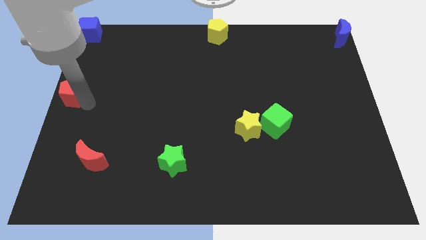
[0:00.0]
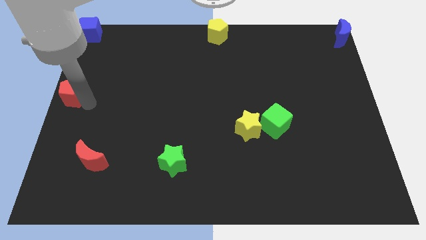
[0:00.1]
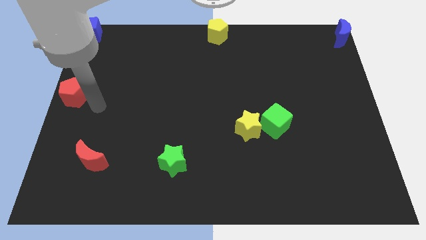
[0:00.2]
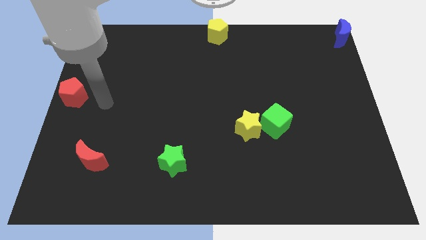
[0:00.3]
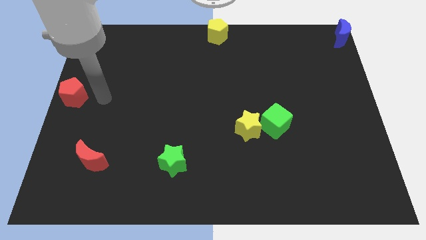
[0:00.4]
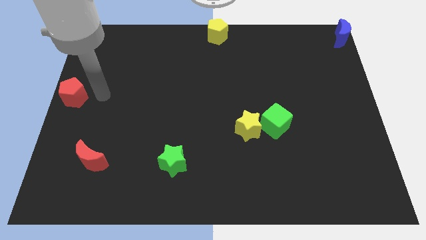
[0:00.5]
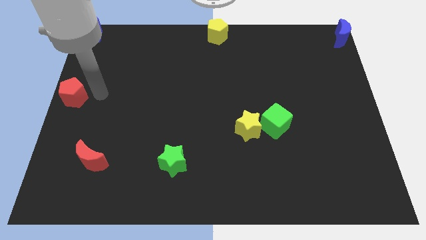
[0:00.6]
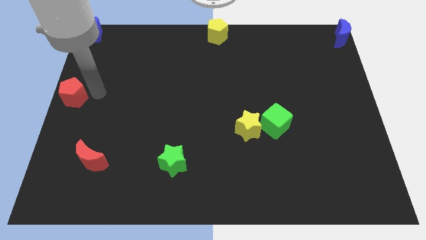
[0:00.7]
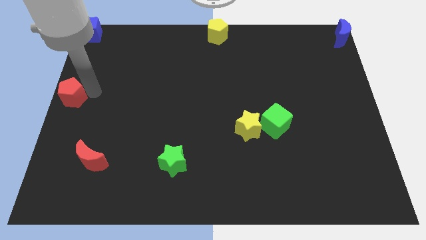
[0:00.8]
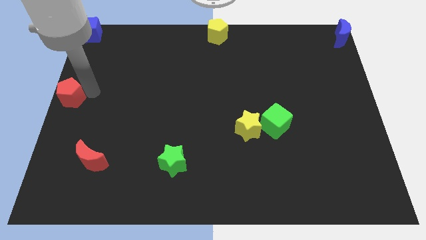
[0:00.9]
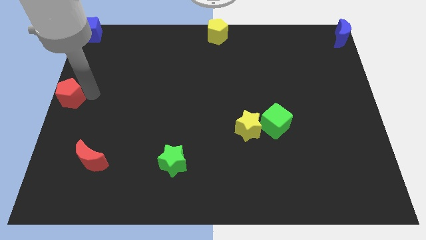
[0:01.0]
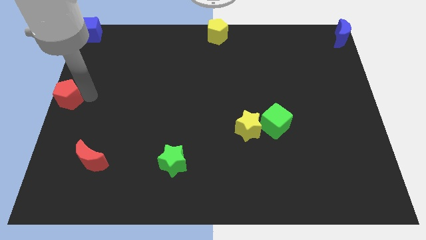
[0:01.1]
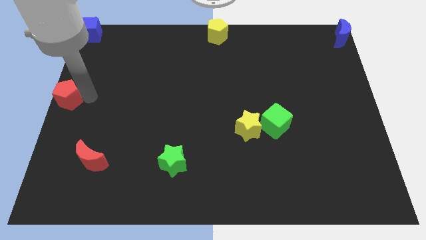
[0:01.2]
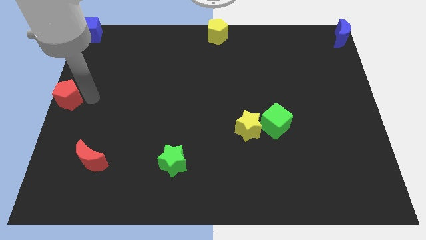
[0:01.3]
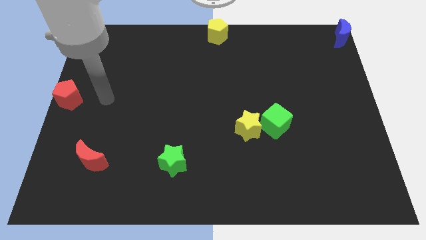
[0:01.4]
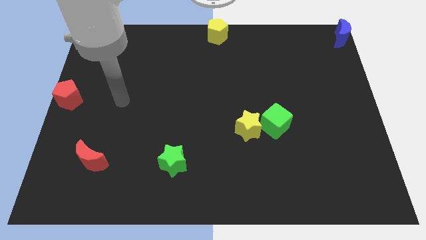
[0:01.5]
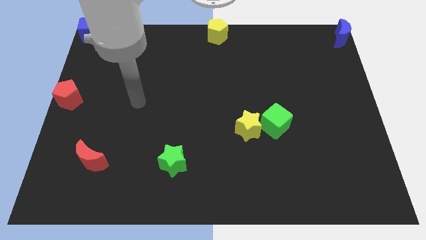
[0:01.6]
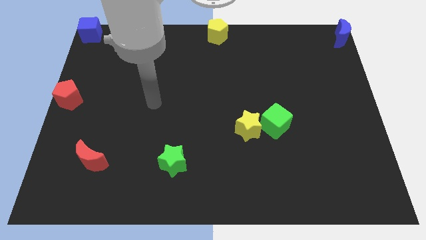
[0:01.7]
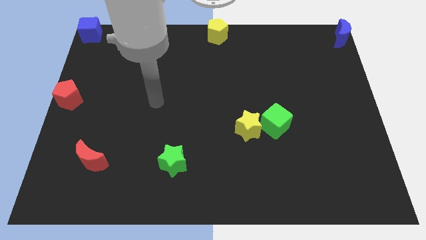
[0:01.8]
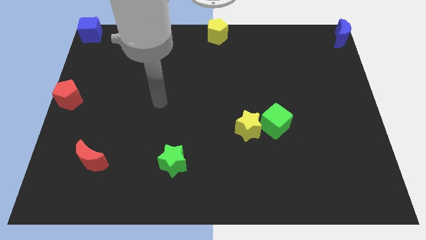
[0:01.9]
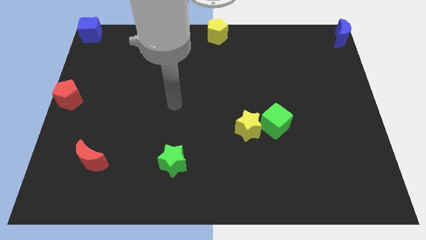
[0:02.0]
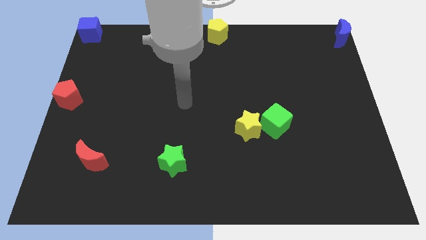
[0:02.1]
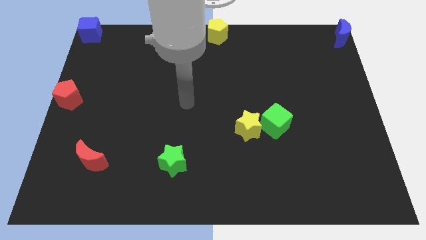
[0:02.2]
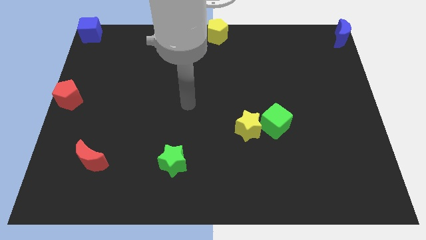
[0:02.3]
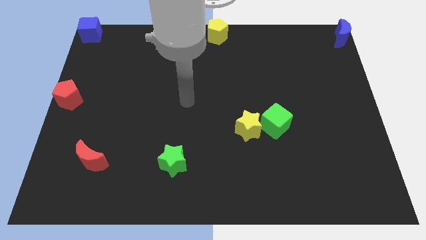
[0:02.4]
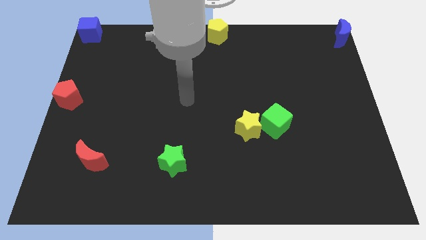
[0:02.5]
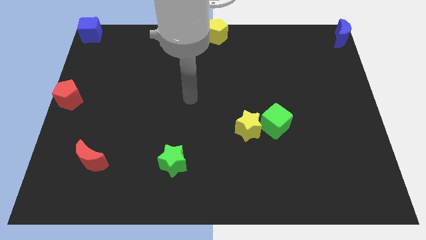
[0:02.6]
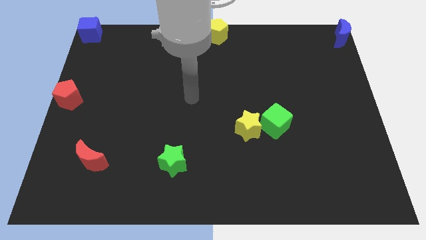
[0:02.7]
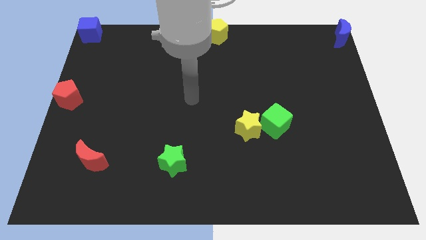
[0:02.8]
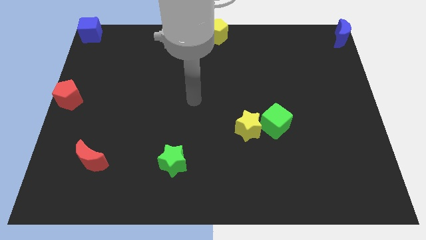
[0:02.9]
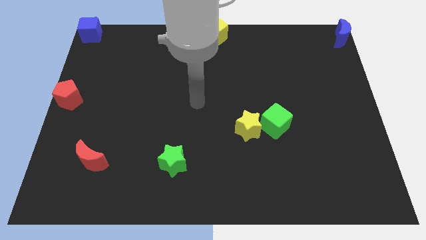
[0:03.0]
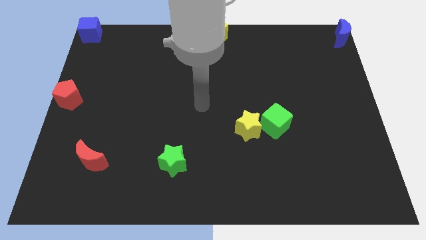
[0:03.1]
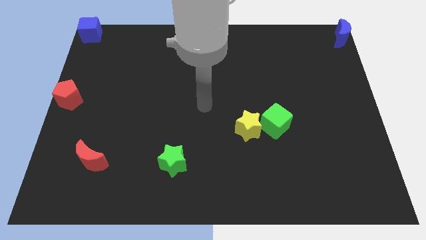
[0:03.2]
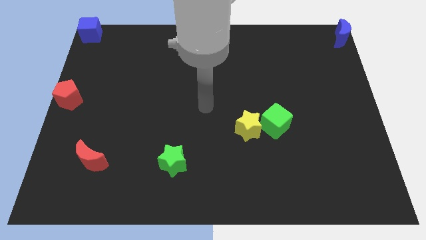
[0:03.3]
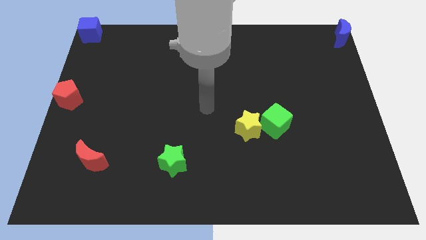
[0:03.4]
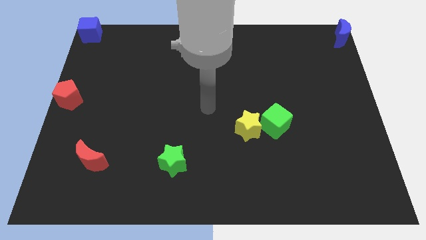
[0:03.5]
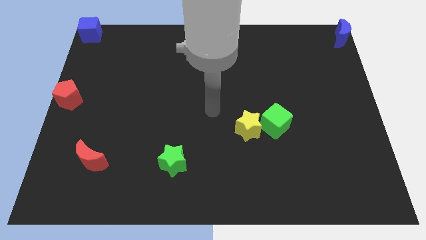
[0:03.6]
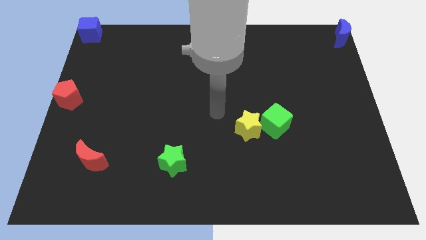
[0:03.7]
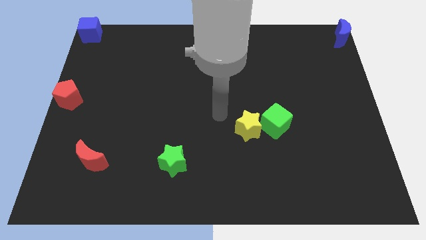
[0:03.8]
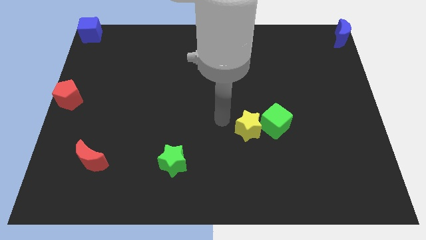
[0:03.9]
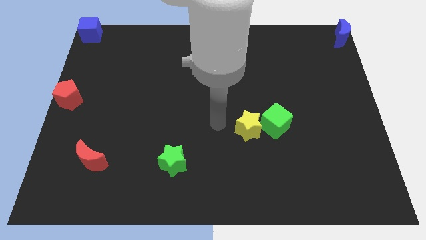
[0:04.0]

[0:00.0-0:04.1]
move your arm away from the red pentagon

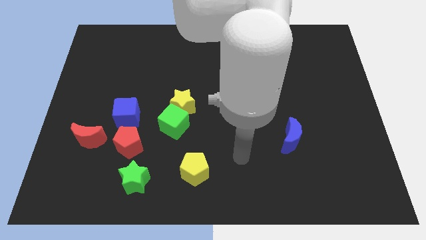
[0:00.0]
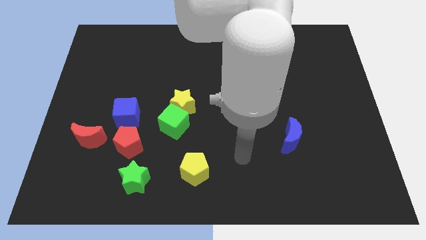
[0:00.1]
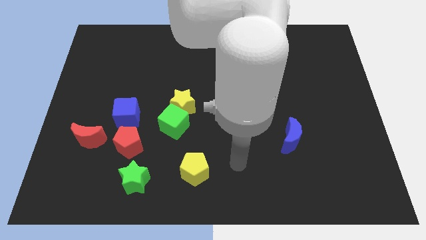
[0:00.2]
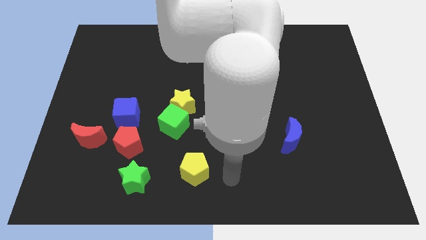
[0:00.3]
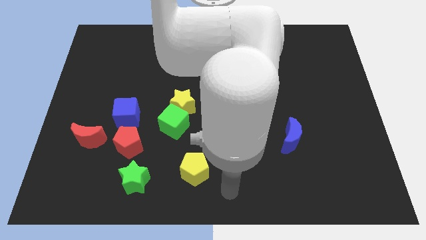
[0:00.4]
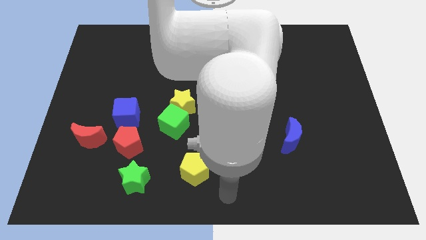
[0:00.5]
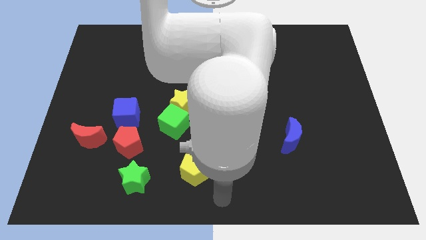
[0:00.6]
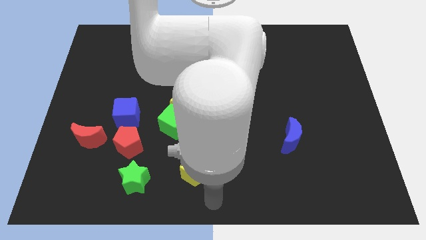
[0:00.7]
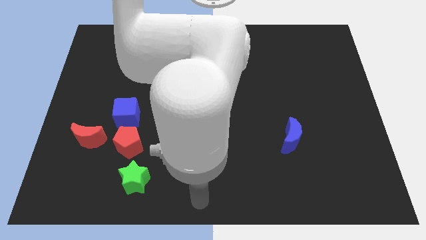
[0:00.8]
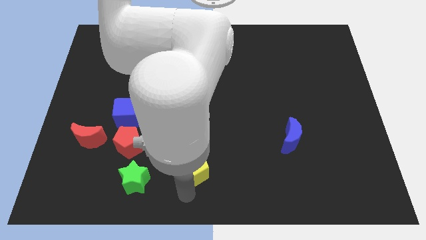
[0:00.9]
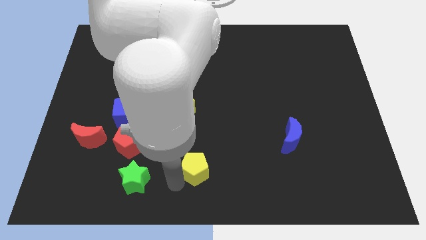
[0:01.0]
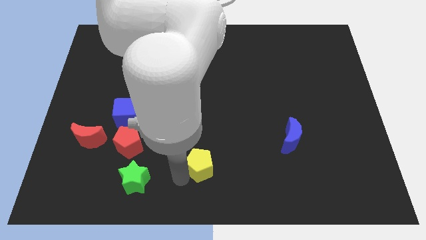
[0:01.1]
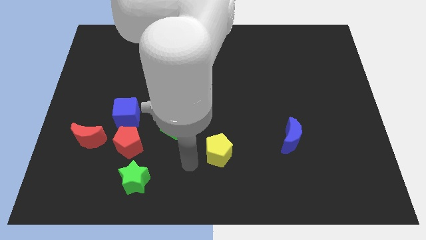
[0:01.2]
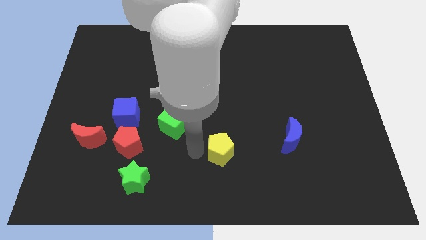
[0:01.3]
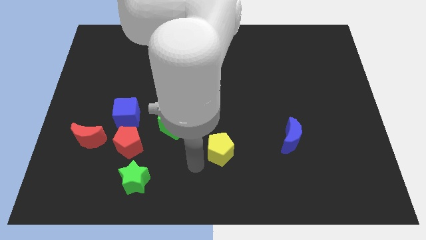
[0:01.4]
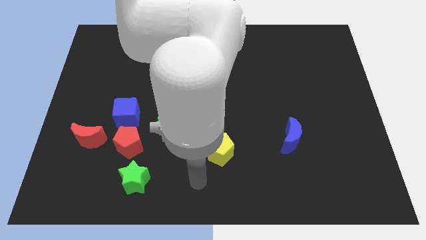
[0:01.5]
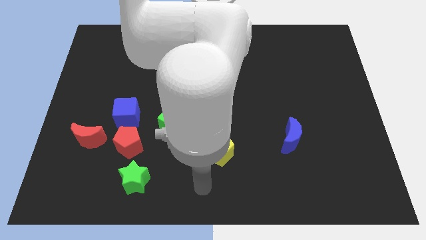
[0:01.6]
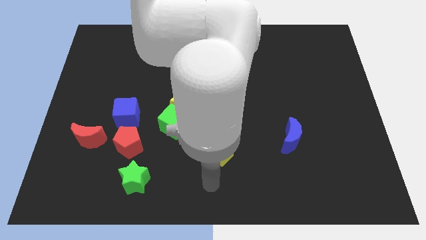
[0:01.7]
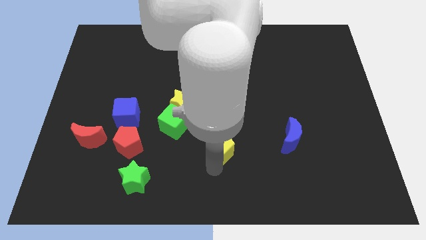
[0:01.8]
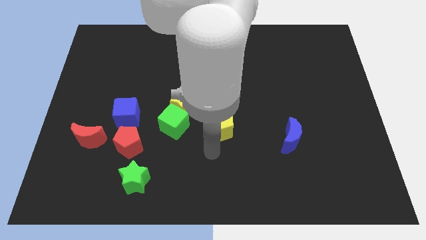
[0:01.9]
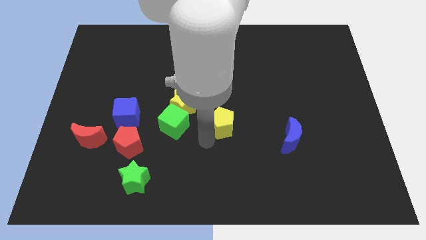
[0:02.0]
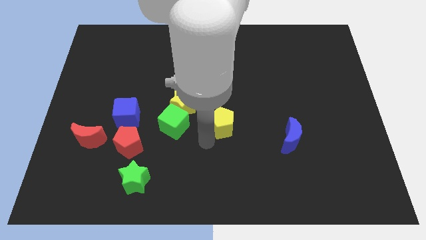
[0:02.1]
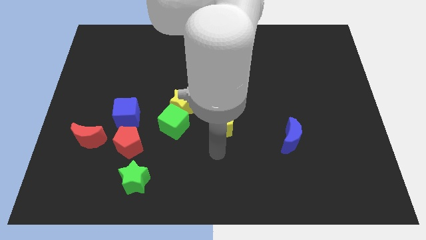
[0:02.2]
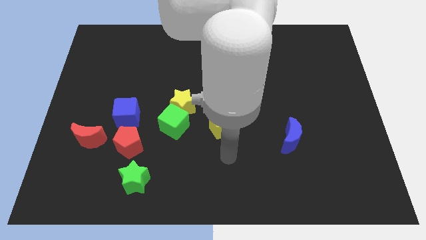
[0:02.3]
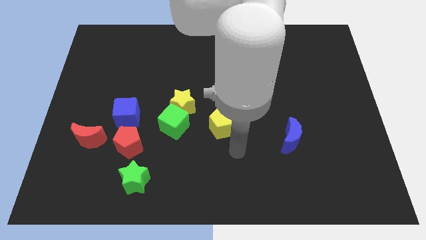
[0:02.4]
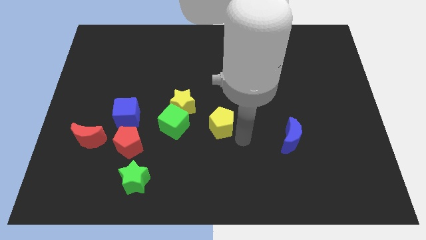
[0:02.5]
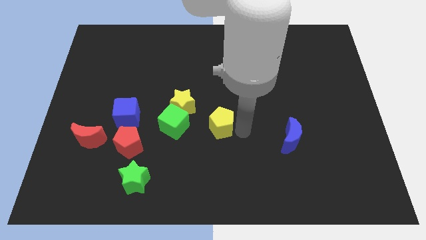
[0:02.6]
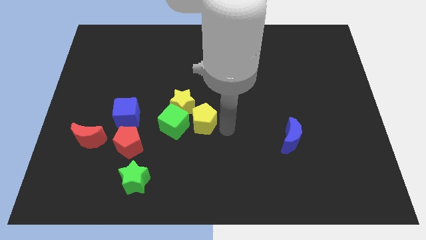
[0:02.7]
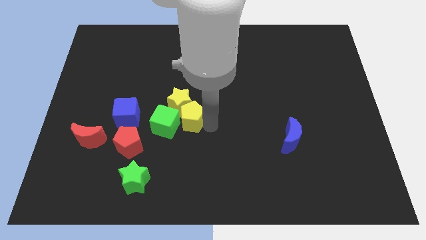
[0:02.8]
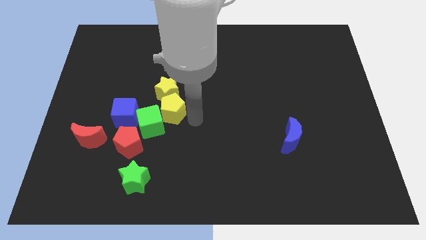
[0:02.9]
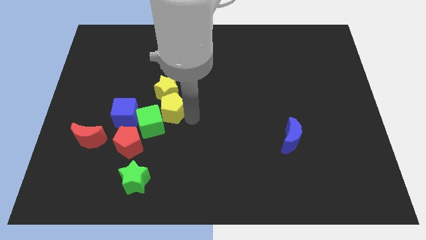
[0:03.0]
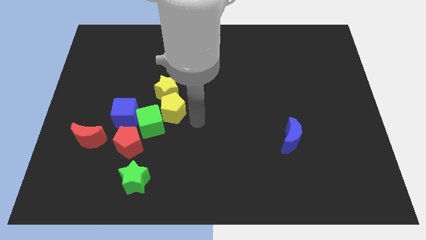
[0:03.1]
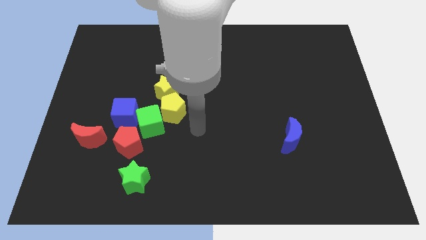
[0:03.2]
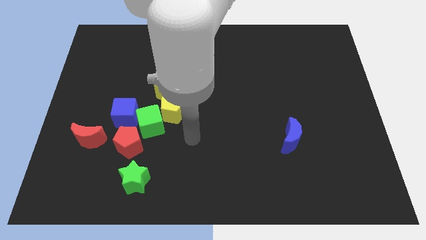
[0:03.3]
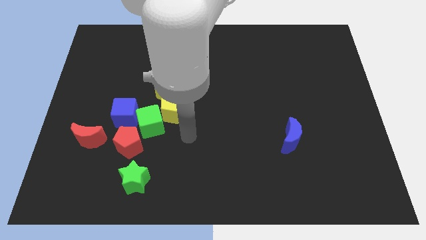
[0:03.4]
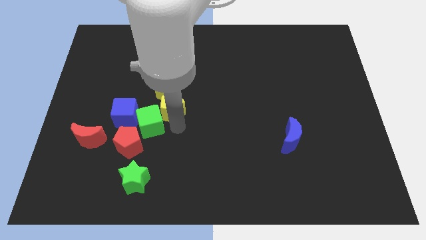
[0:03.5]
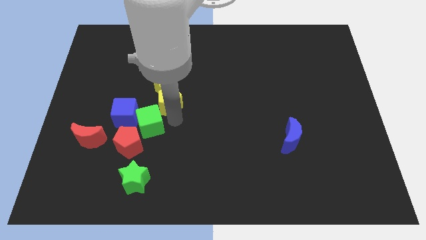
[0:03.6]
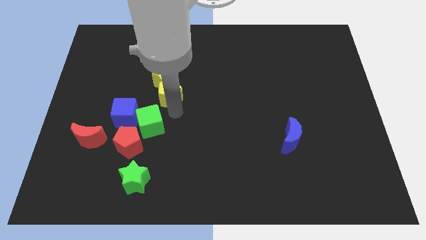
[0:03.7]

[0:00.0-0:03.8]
move the yellow pentagon below the yellow star

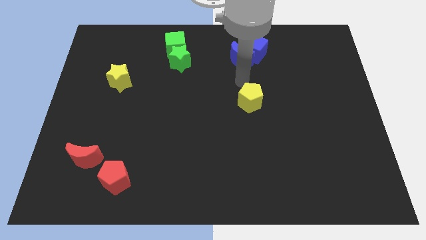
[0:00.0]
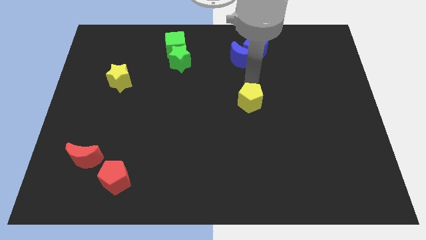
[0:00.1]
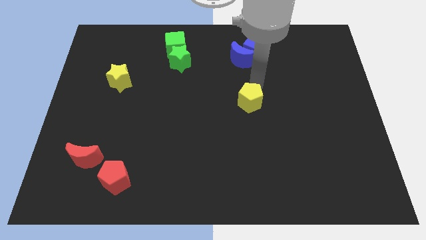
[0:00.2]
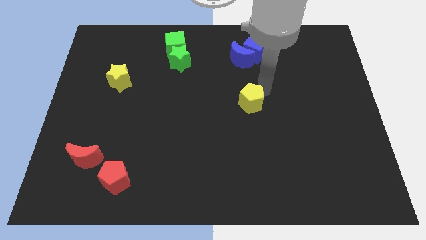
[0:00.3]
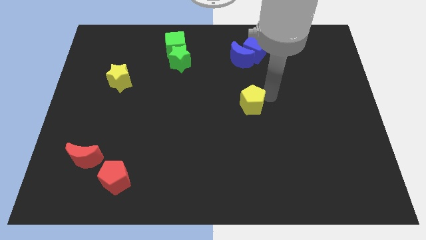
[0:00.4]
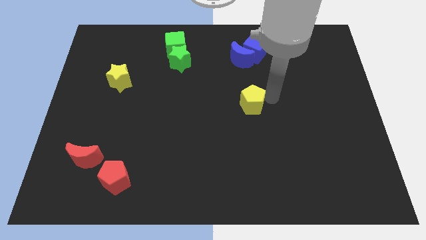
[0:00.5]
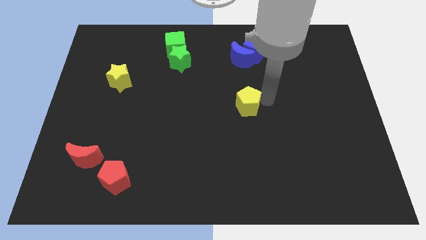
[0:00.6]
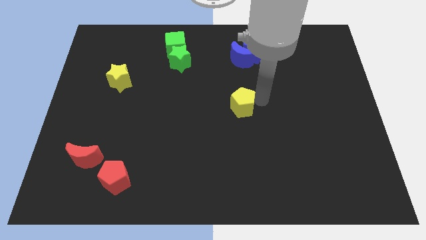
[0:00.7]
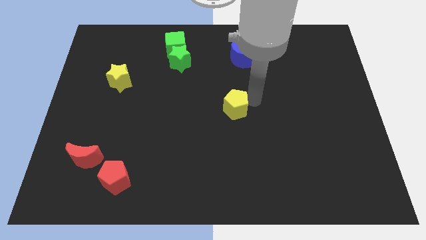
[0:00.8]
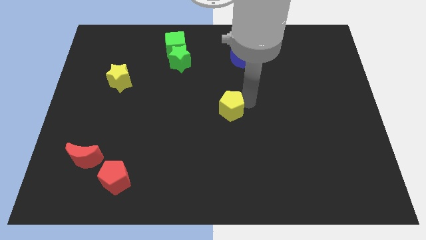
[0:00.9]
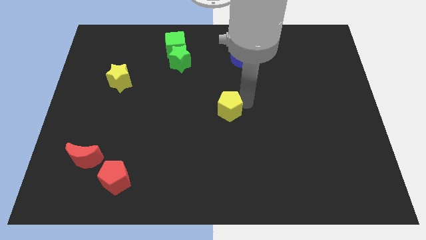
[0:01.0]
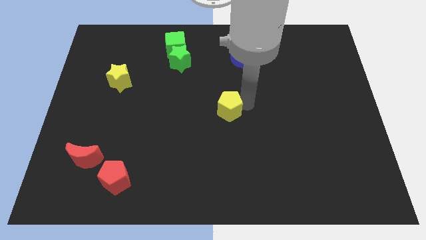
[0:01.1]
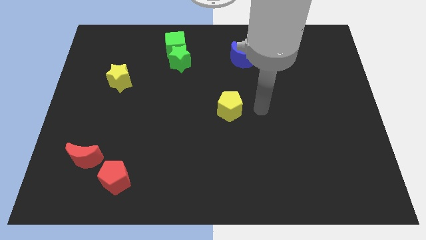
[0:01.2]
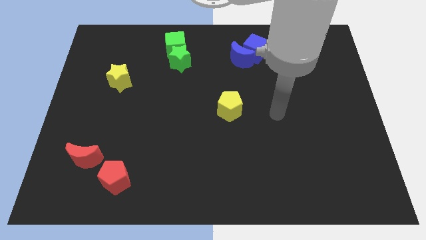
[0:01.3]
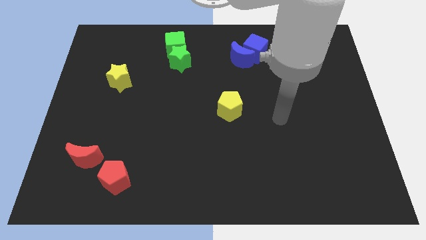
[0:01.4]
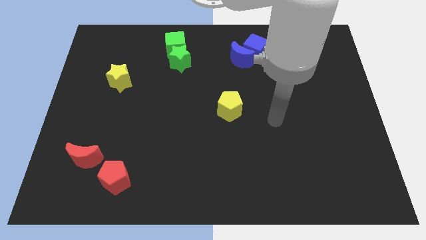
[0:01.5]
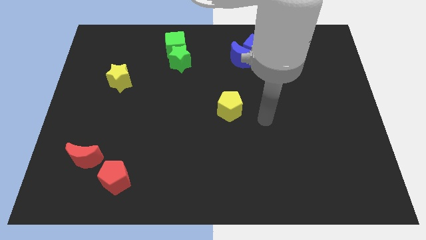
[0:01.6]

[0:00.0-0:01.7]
place yellow pentagon to the center of the board
